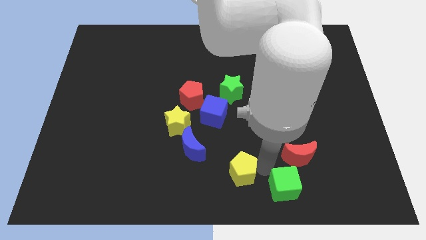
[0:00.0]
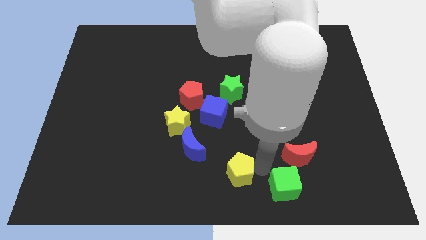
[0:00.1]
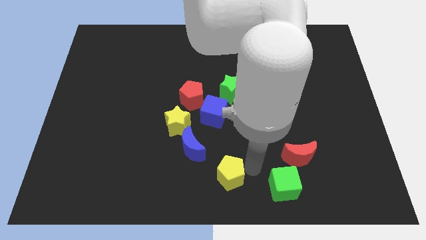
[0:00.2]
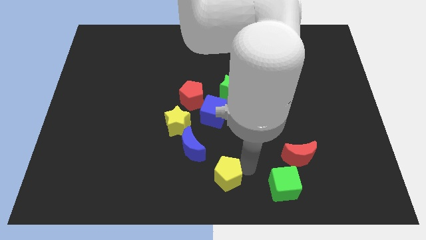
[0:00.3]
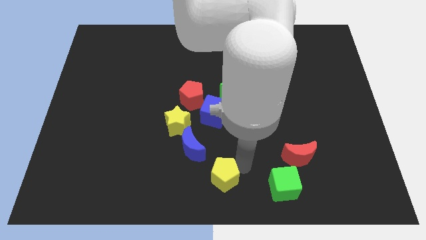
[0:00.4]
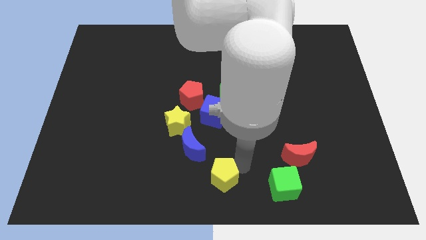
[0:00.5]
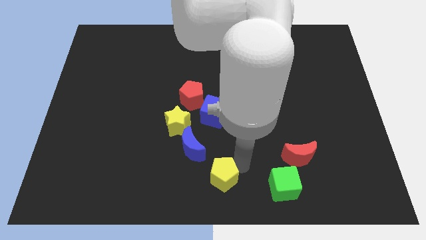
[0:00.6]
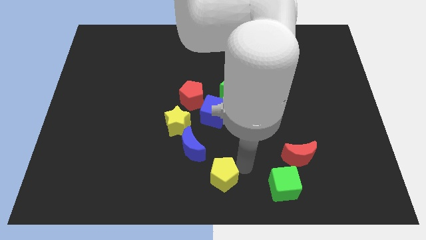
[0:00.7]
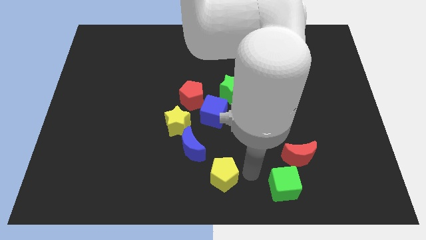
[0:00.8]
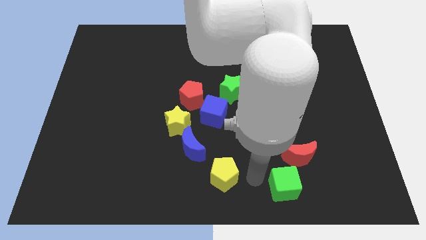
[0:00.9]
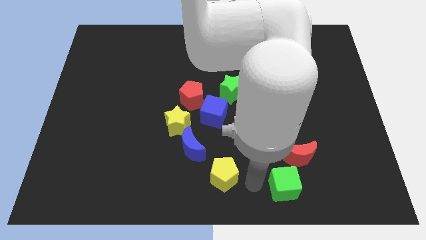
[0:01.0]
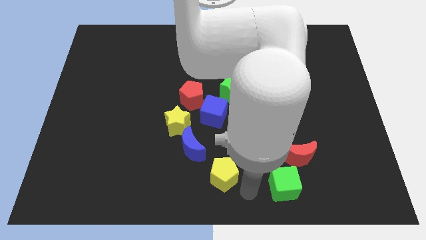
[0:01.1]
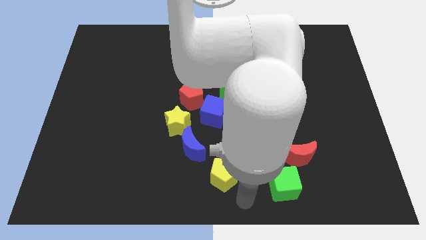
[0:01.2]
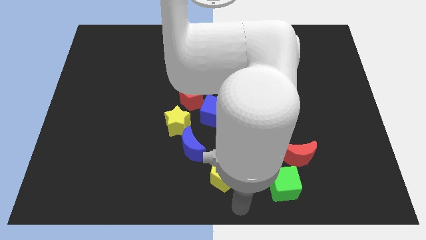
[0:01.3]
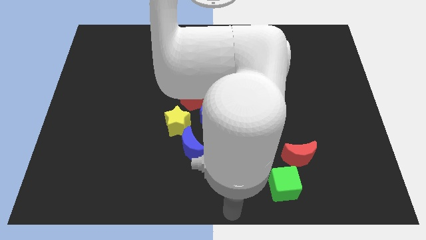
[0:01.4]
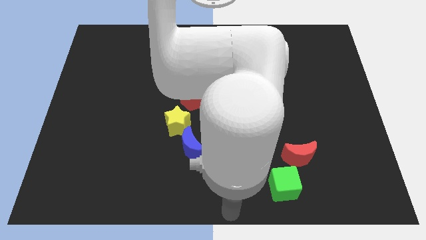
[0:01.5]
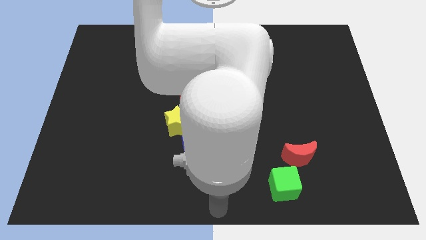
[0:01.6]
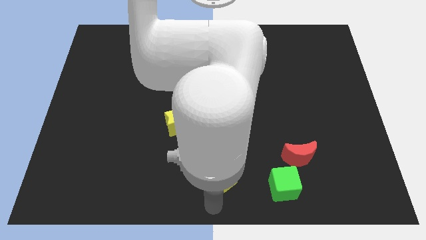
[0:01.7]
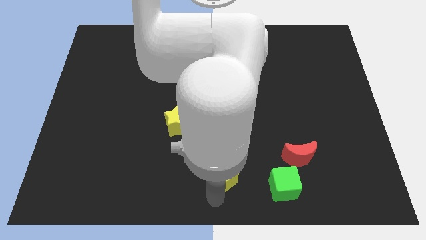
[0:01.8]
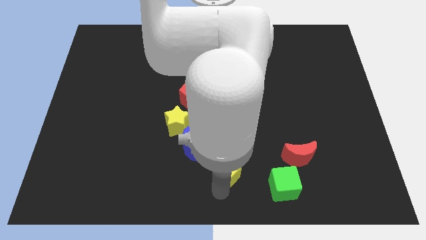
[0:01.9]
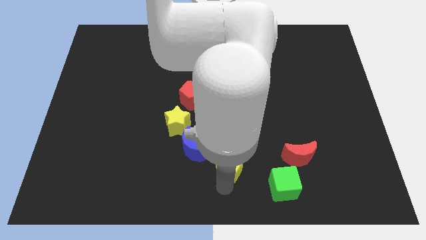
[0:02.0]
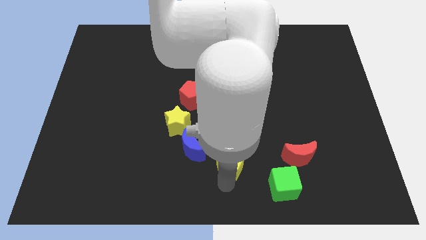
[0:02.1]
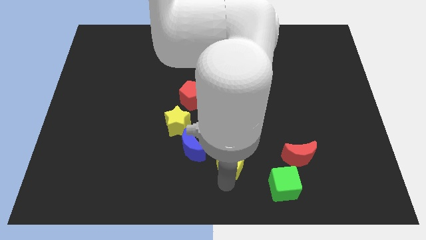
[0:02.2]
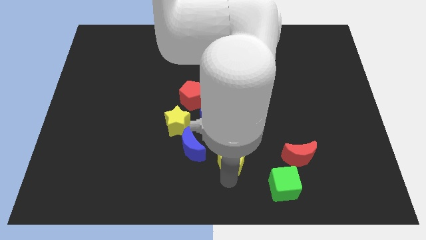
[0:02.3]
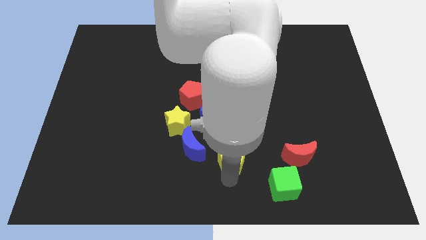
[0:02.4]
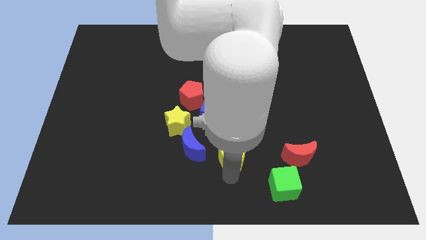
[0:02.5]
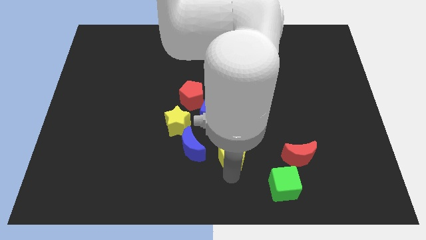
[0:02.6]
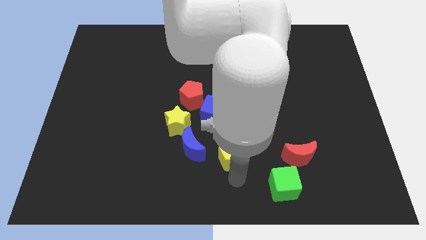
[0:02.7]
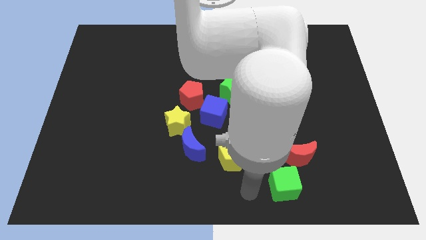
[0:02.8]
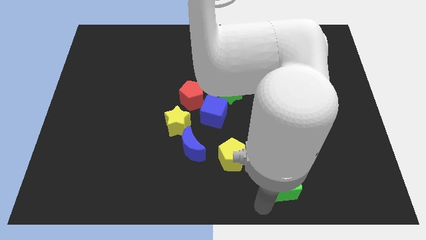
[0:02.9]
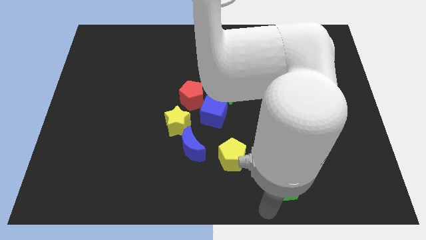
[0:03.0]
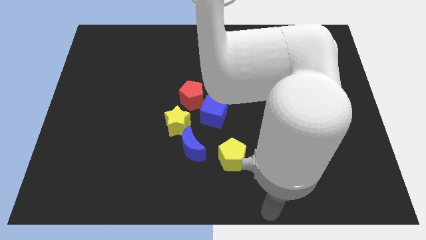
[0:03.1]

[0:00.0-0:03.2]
place the yellow pentagon to the right of the blue crescent

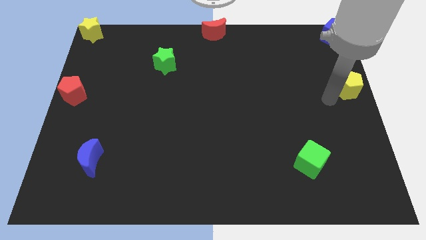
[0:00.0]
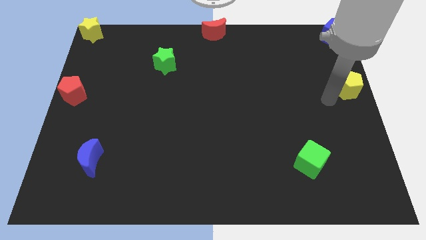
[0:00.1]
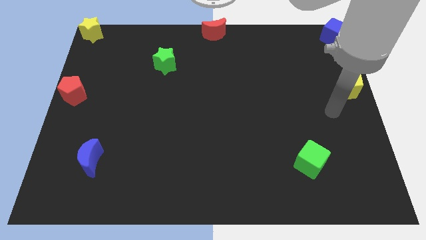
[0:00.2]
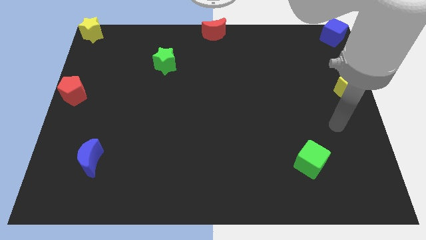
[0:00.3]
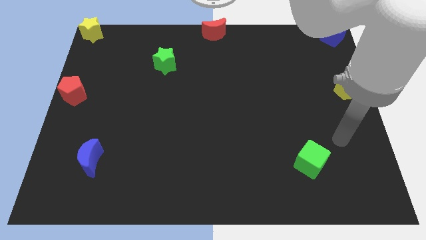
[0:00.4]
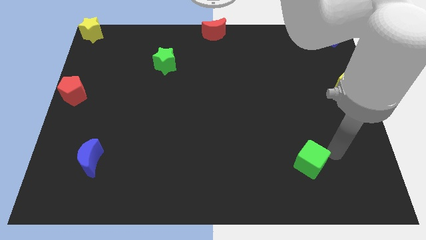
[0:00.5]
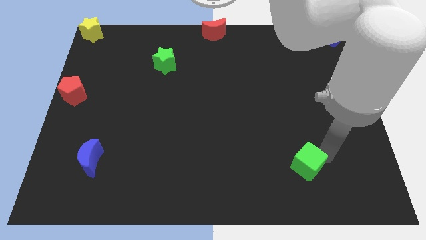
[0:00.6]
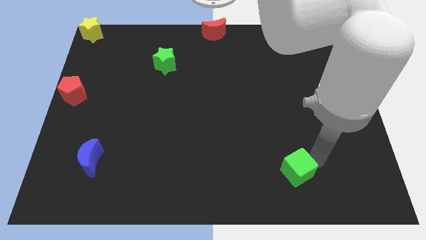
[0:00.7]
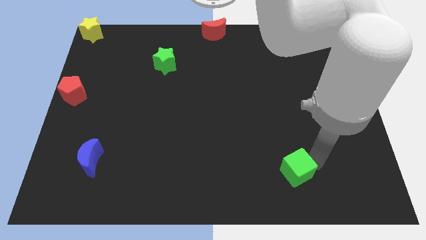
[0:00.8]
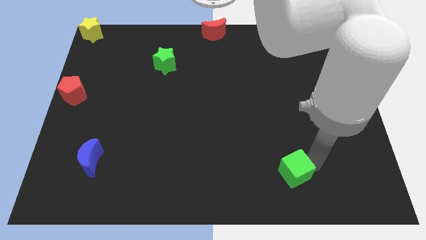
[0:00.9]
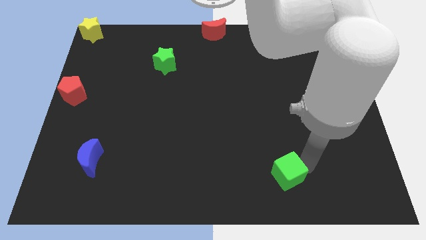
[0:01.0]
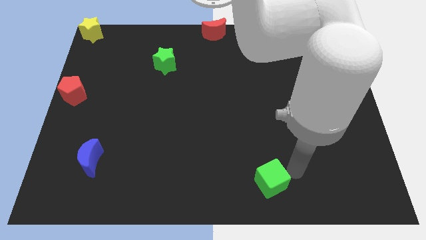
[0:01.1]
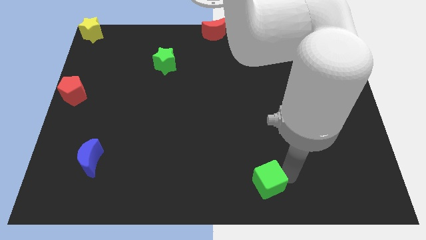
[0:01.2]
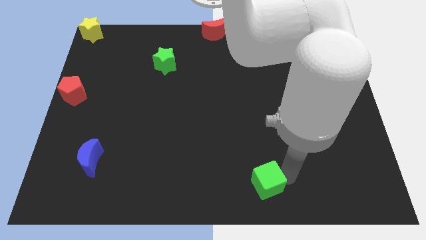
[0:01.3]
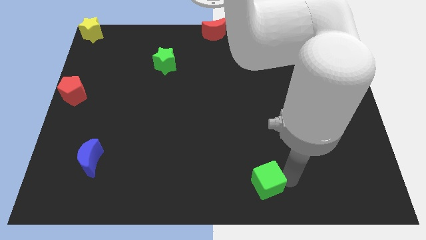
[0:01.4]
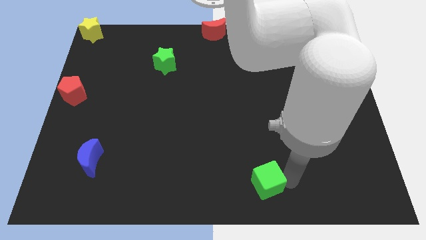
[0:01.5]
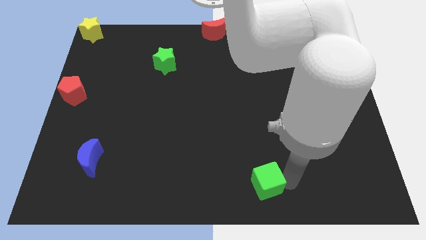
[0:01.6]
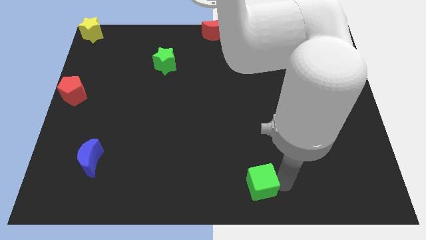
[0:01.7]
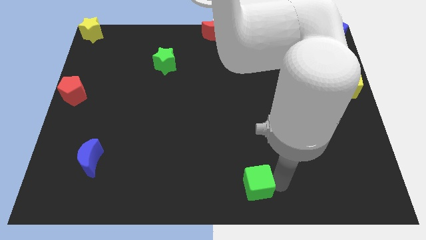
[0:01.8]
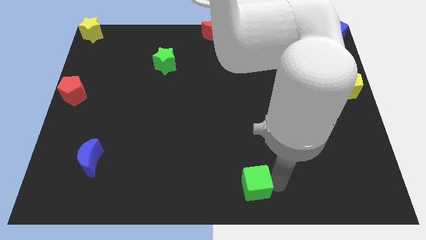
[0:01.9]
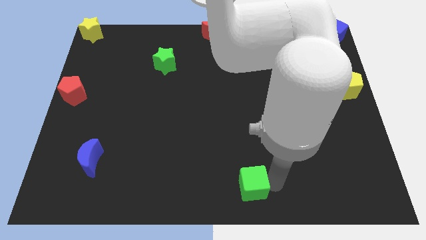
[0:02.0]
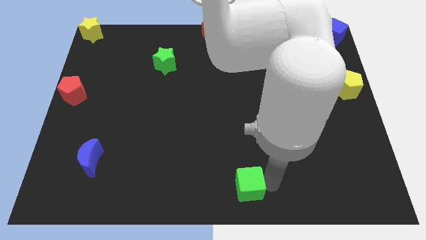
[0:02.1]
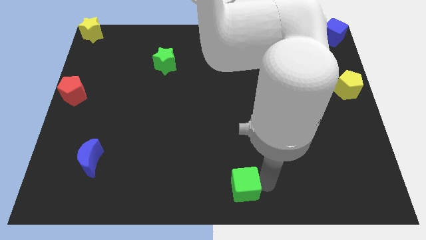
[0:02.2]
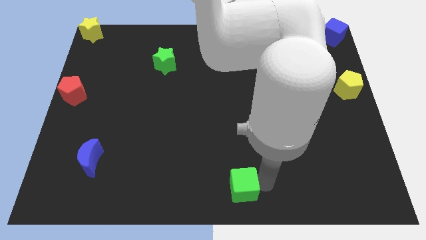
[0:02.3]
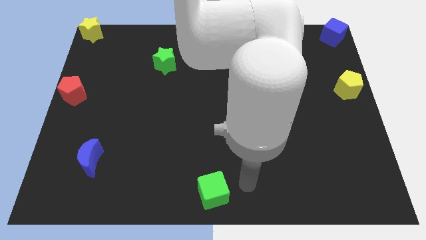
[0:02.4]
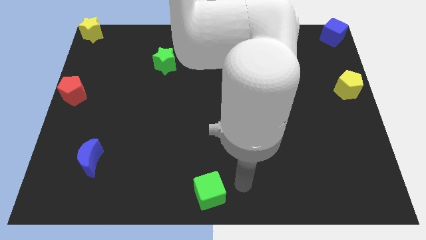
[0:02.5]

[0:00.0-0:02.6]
move the green cube to the bottom center

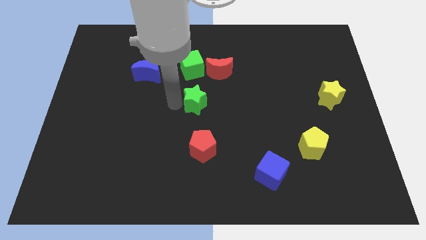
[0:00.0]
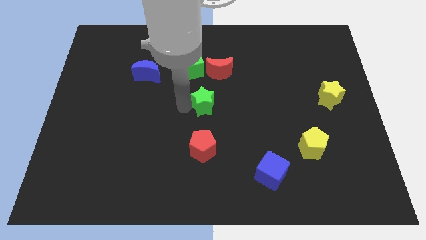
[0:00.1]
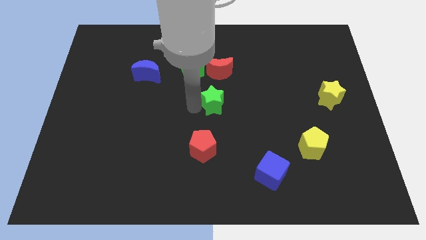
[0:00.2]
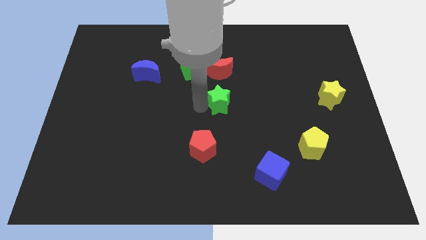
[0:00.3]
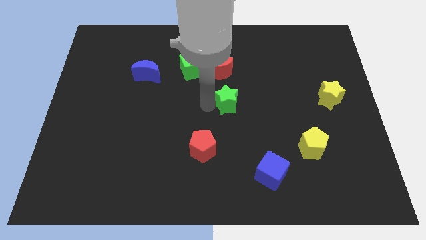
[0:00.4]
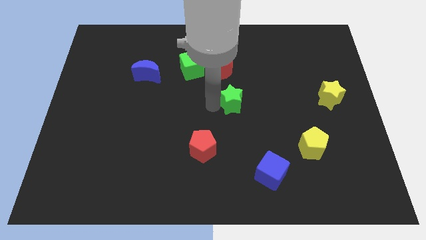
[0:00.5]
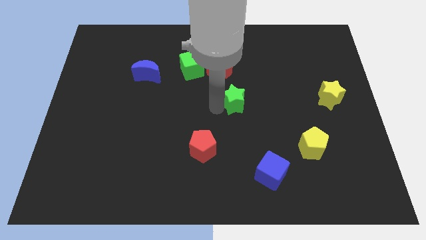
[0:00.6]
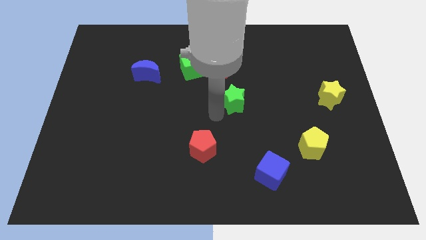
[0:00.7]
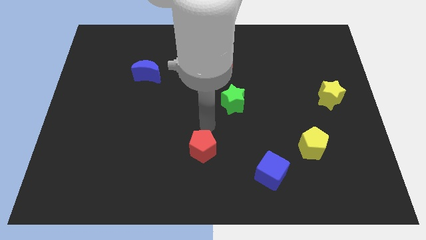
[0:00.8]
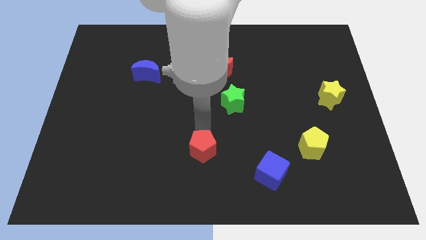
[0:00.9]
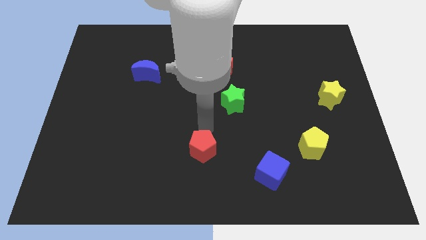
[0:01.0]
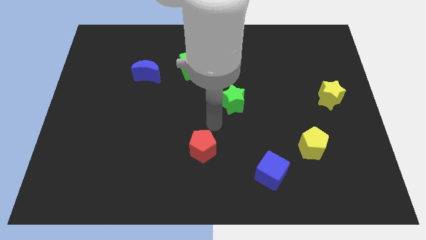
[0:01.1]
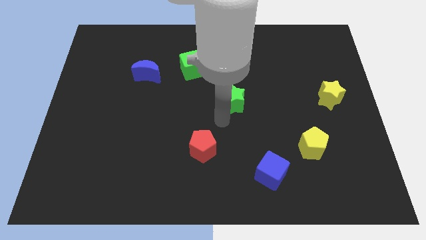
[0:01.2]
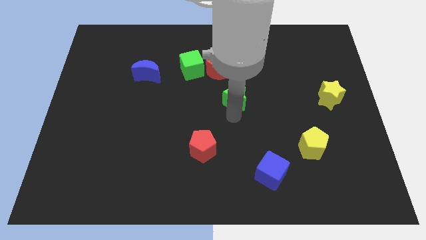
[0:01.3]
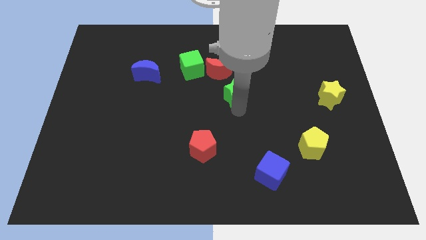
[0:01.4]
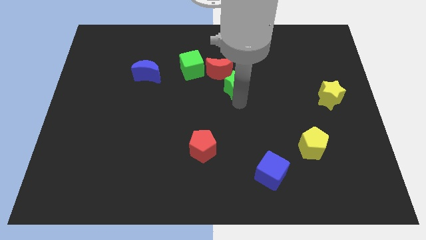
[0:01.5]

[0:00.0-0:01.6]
drag the green star to the right

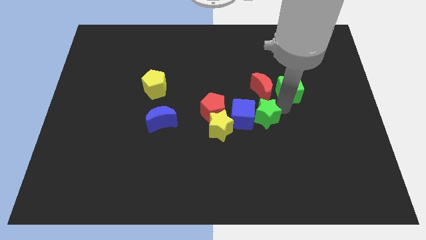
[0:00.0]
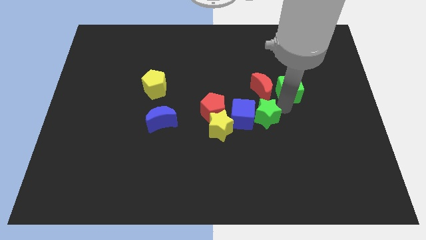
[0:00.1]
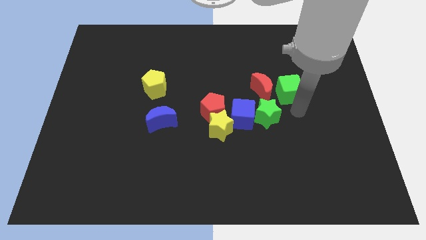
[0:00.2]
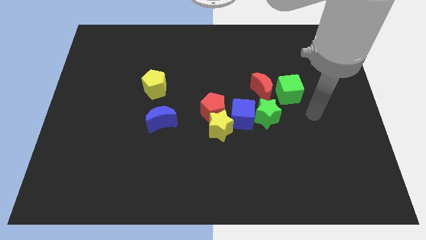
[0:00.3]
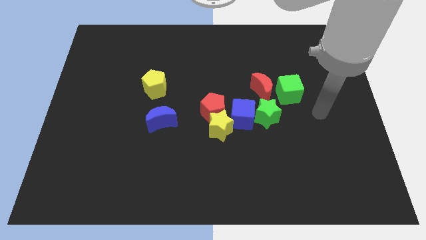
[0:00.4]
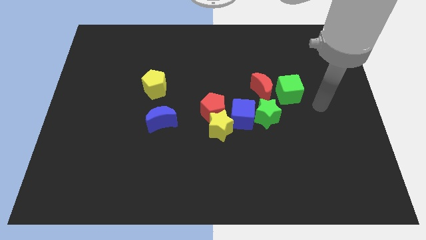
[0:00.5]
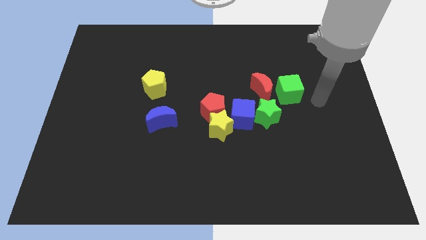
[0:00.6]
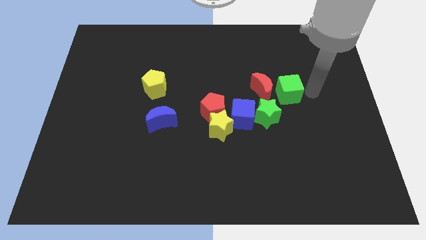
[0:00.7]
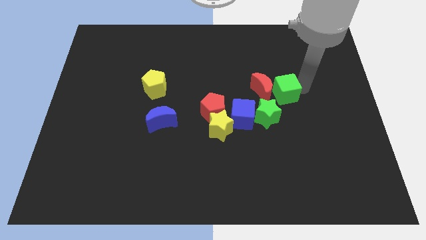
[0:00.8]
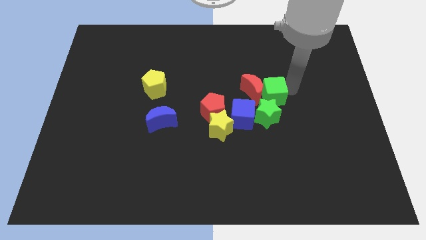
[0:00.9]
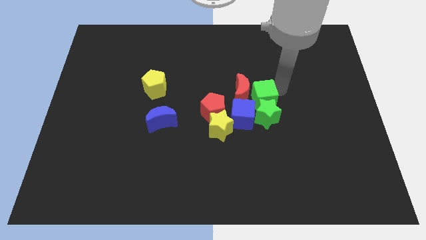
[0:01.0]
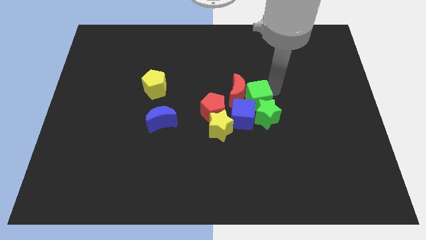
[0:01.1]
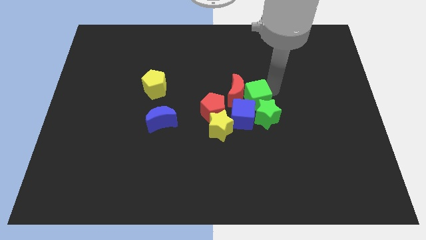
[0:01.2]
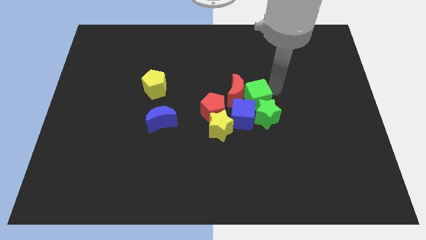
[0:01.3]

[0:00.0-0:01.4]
put the green cube into blue cube

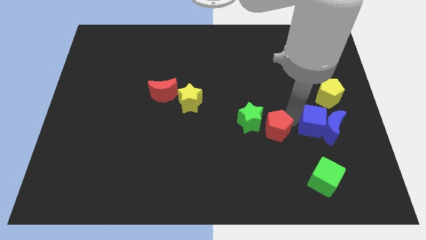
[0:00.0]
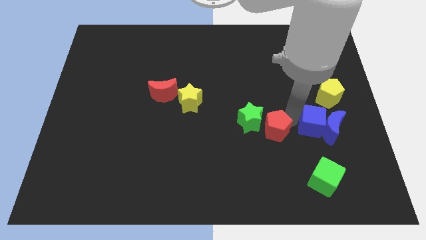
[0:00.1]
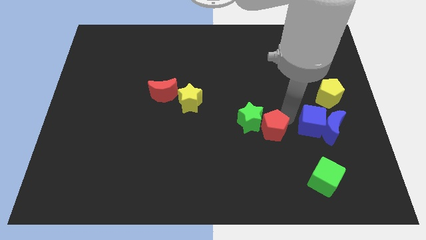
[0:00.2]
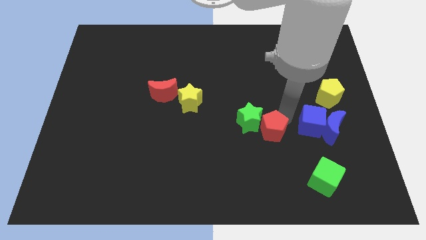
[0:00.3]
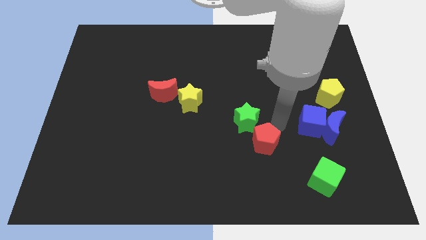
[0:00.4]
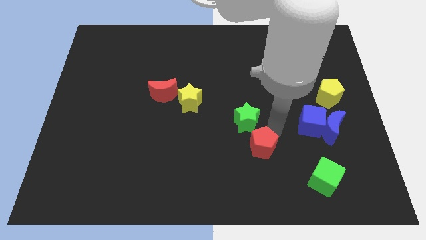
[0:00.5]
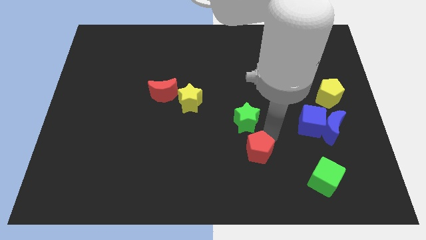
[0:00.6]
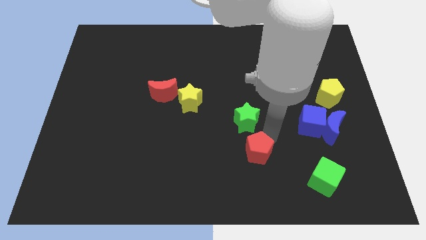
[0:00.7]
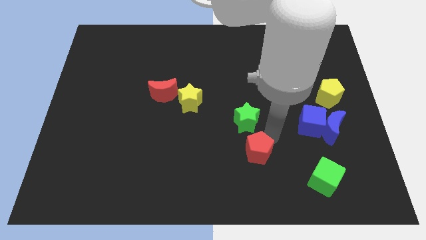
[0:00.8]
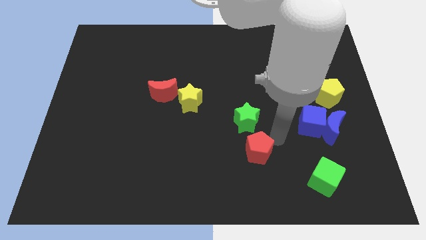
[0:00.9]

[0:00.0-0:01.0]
slightly move the red pentagon to the bottom right of green star
